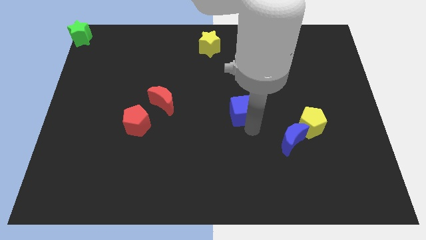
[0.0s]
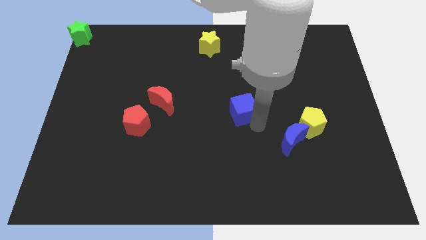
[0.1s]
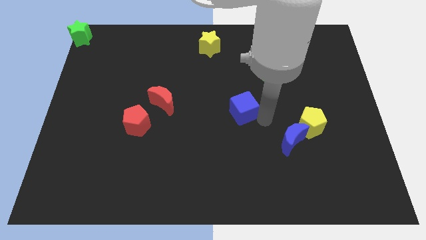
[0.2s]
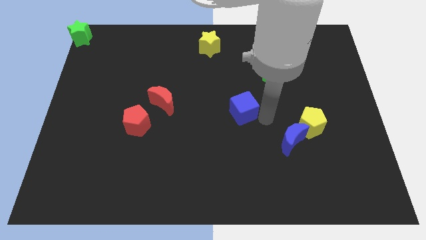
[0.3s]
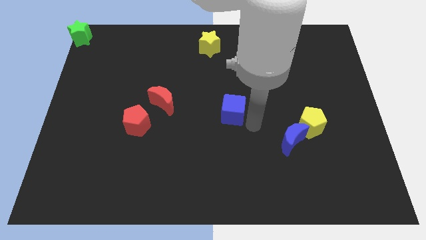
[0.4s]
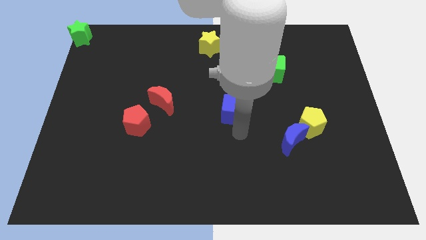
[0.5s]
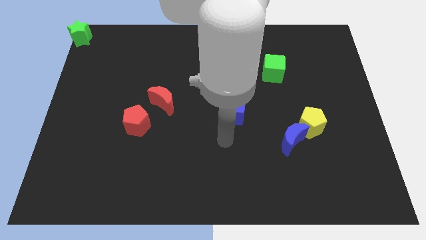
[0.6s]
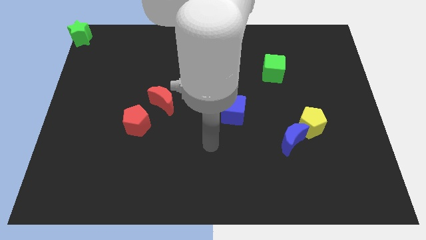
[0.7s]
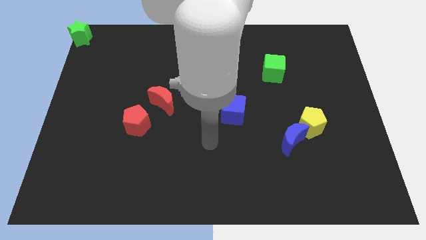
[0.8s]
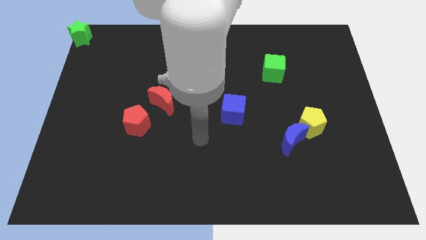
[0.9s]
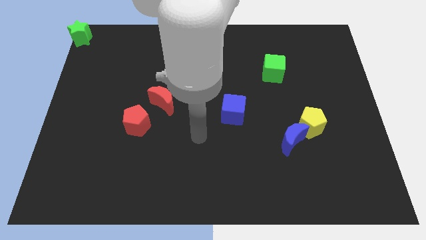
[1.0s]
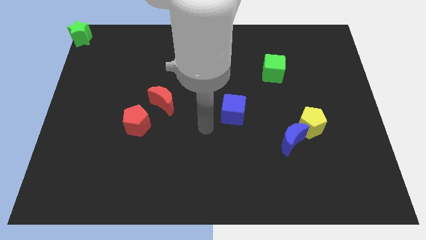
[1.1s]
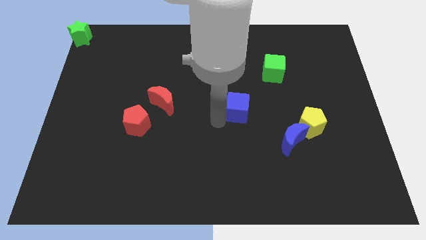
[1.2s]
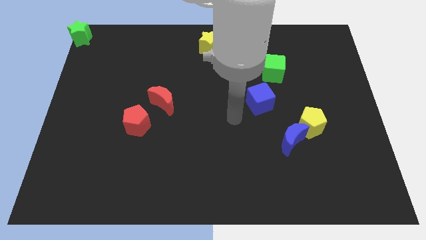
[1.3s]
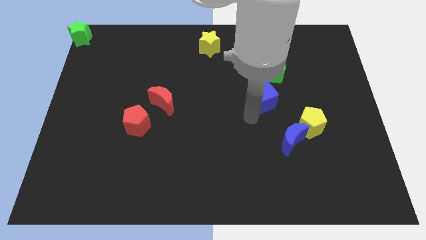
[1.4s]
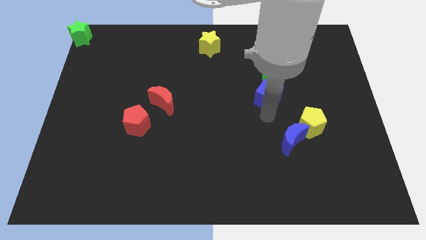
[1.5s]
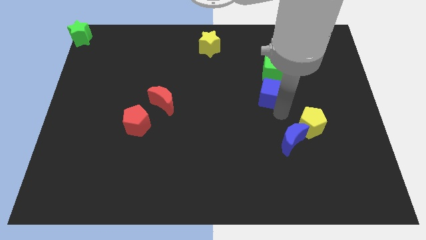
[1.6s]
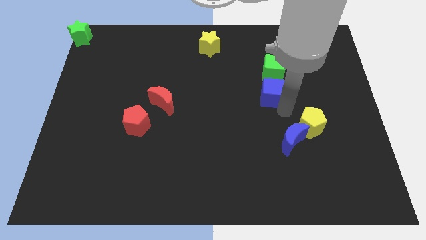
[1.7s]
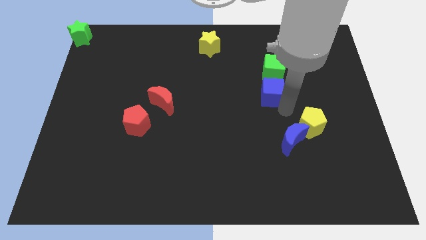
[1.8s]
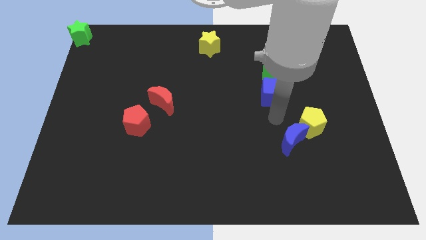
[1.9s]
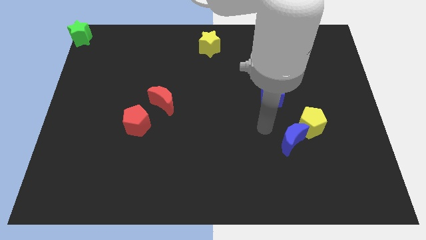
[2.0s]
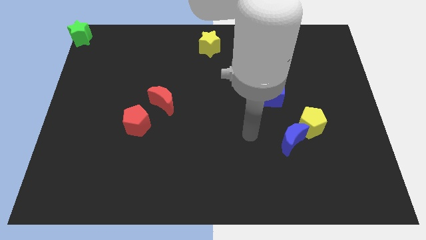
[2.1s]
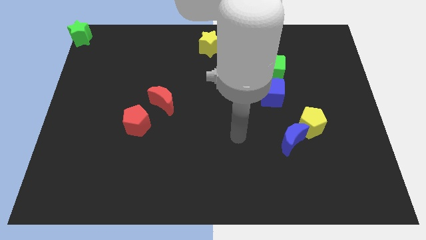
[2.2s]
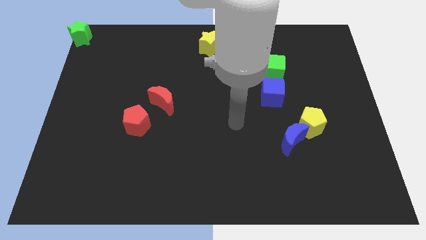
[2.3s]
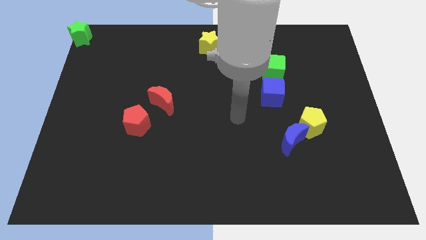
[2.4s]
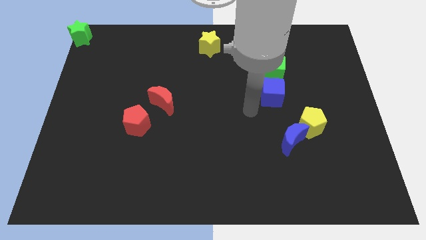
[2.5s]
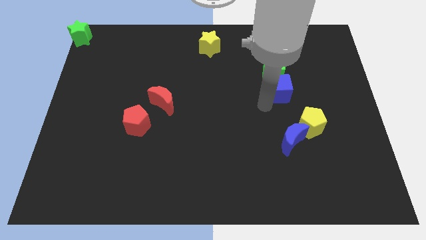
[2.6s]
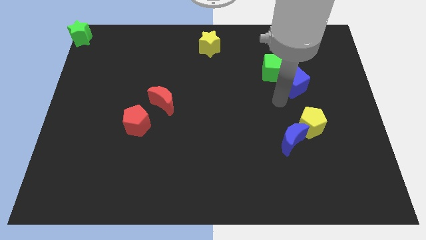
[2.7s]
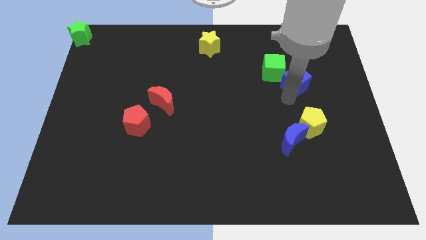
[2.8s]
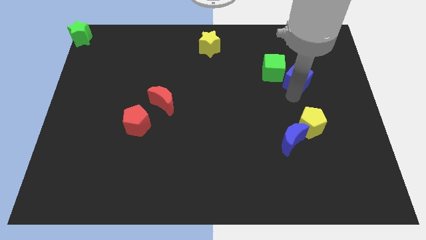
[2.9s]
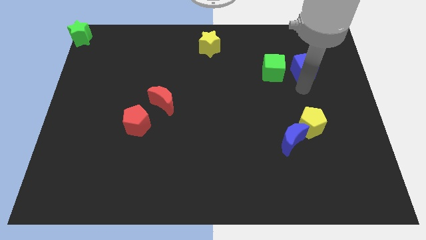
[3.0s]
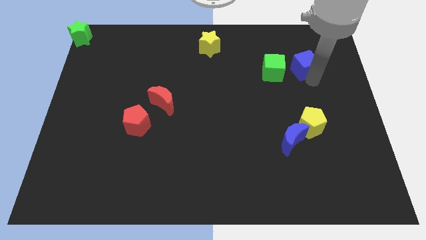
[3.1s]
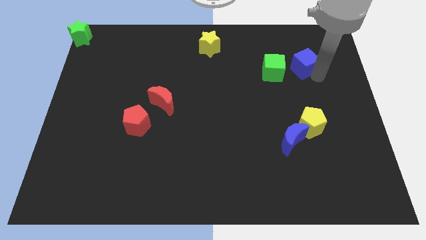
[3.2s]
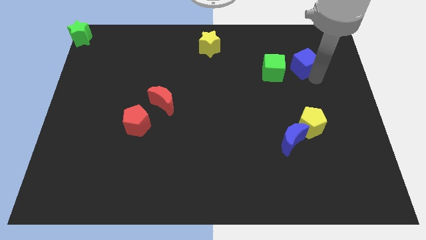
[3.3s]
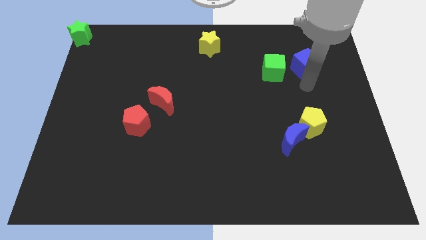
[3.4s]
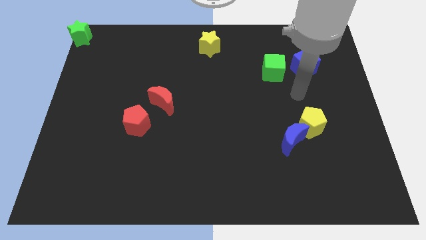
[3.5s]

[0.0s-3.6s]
move the blue cube to the right side of the green cube

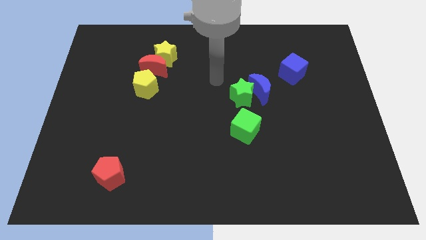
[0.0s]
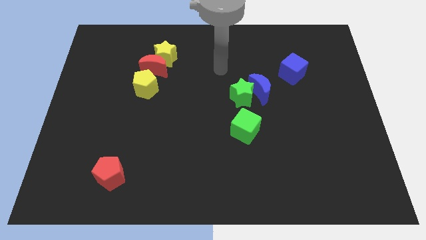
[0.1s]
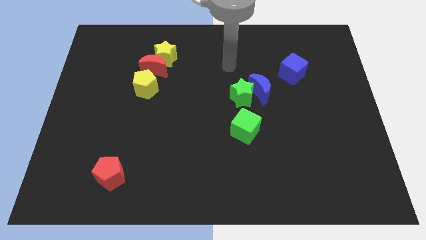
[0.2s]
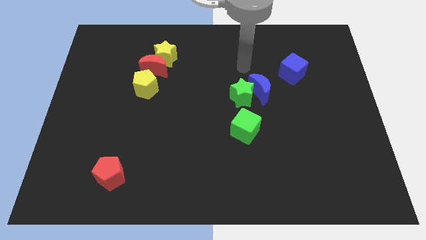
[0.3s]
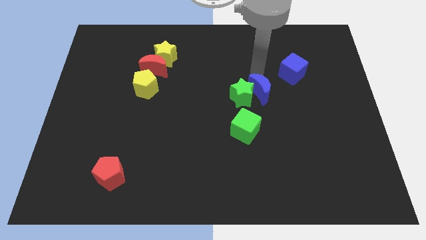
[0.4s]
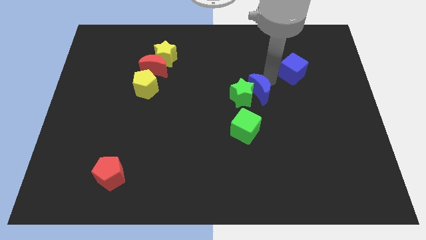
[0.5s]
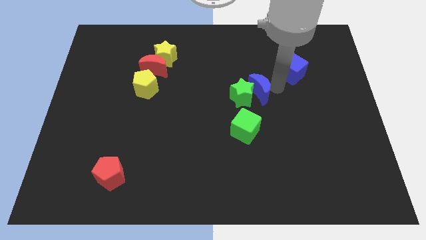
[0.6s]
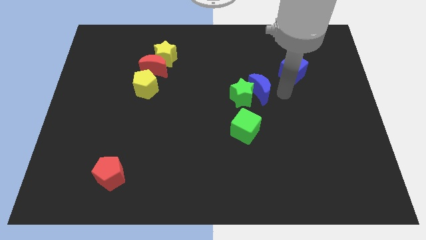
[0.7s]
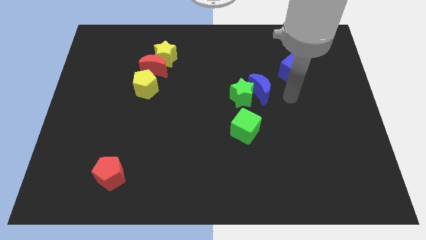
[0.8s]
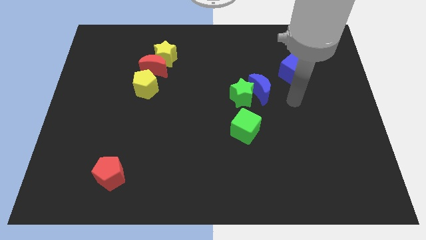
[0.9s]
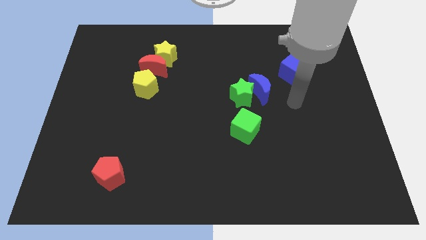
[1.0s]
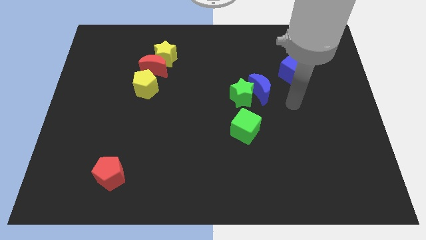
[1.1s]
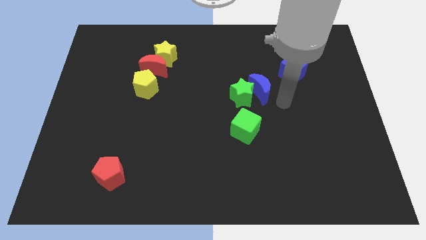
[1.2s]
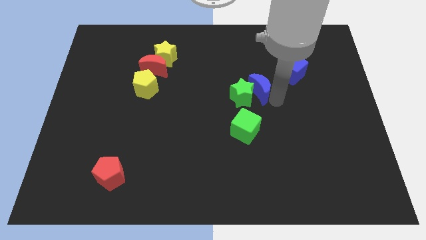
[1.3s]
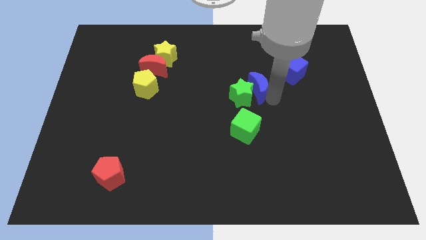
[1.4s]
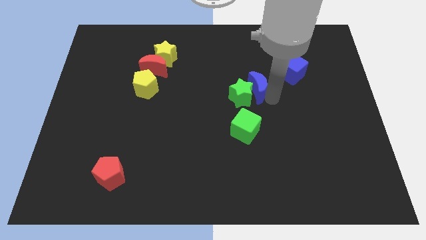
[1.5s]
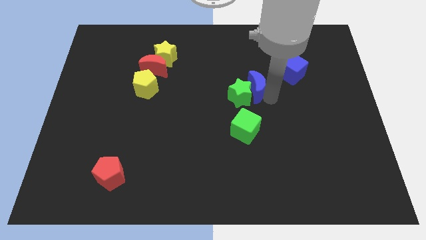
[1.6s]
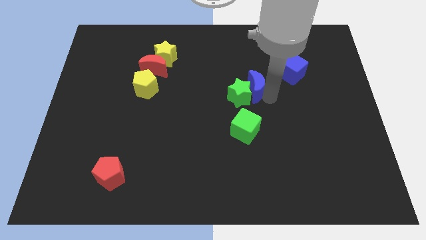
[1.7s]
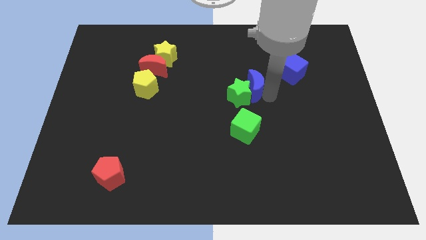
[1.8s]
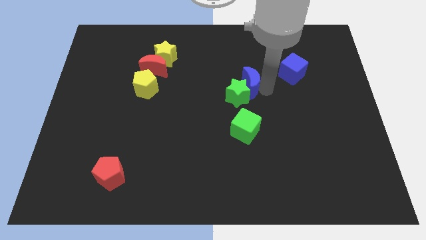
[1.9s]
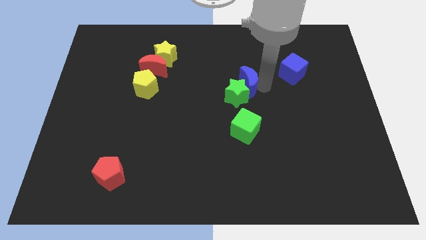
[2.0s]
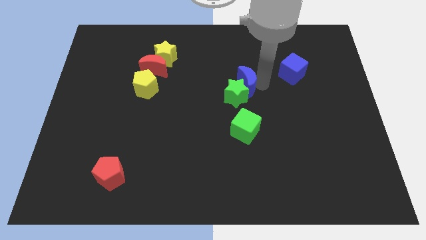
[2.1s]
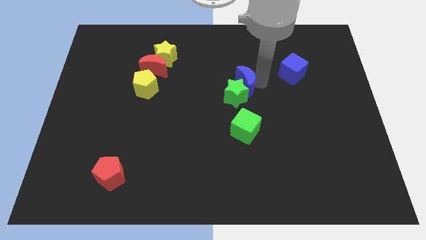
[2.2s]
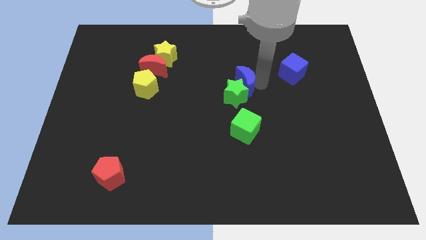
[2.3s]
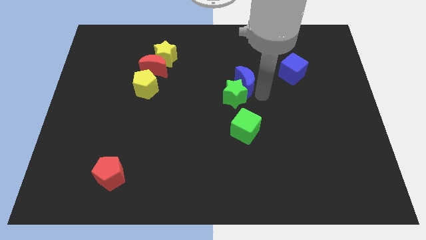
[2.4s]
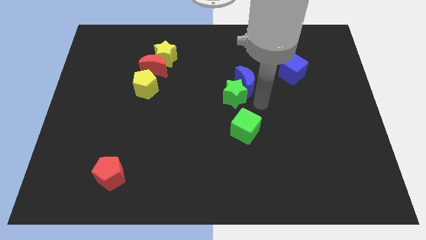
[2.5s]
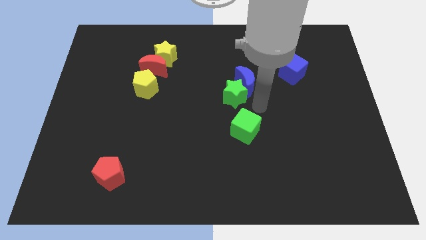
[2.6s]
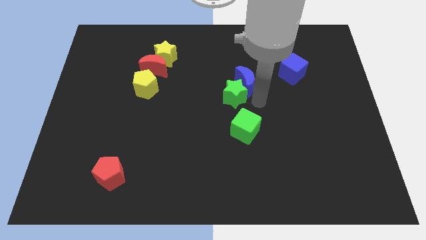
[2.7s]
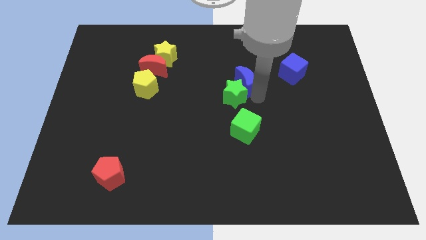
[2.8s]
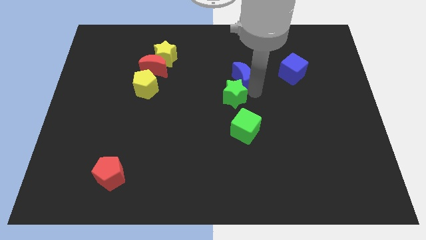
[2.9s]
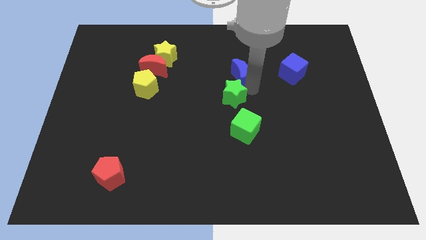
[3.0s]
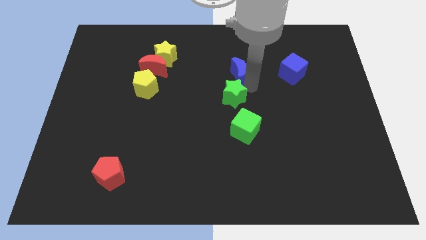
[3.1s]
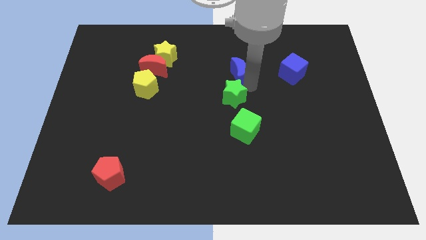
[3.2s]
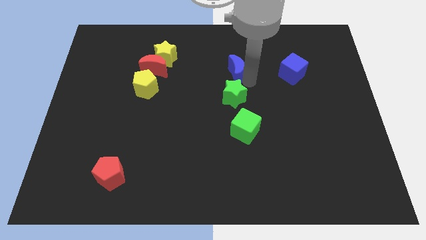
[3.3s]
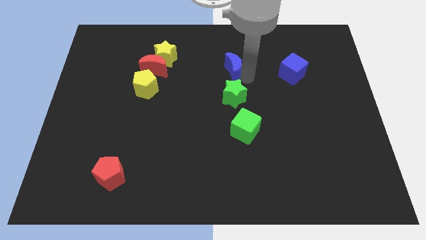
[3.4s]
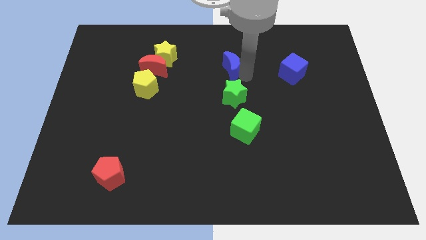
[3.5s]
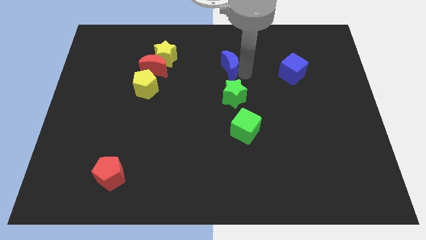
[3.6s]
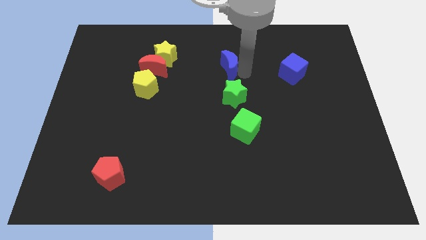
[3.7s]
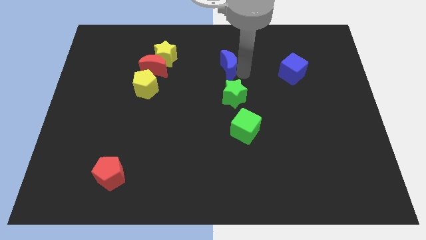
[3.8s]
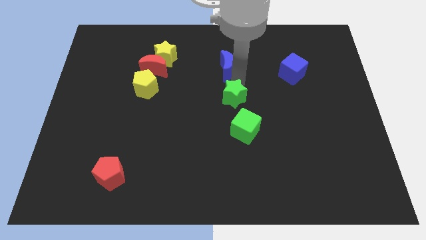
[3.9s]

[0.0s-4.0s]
place the blue crescent above the green star

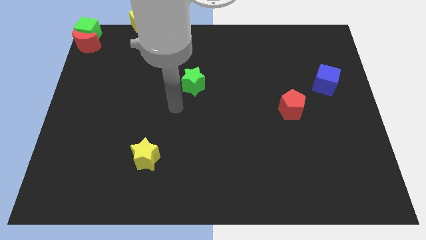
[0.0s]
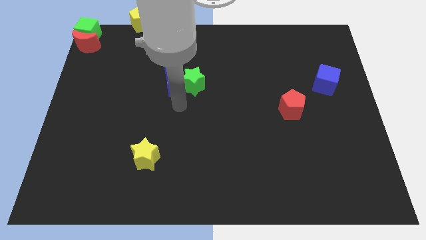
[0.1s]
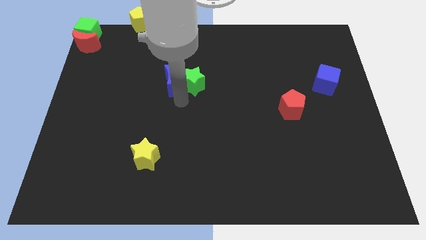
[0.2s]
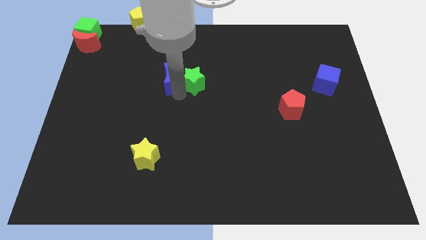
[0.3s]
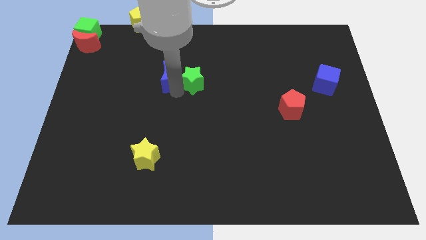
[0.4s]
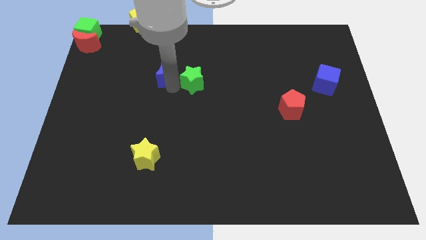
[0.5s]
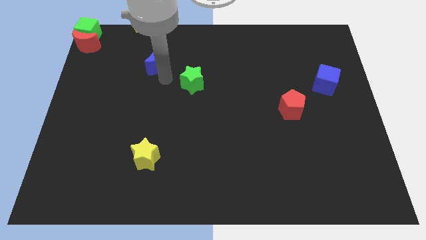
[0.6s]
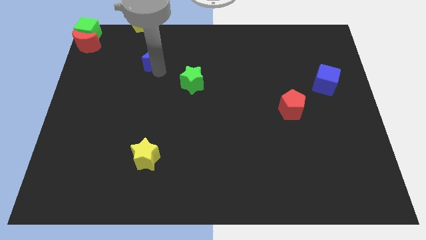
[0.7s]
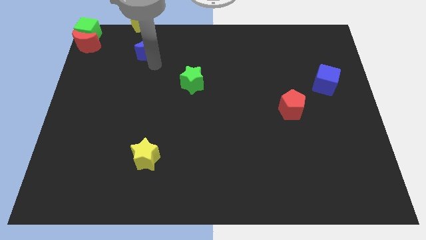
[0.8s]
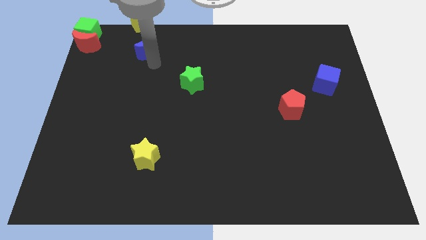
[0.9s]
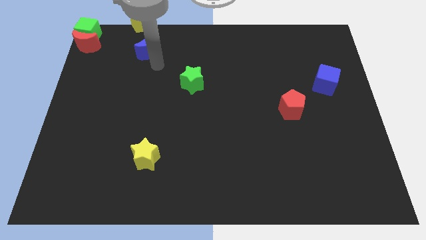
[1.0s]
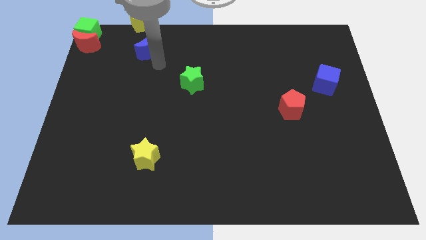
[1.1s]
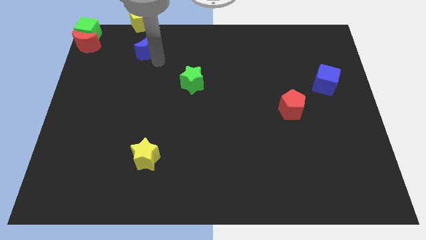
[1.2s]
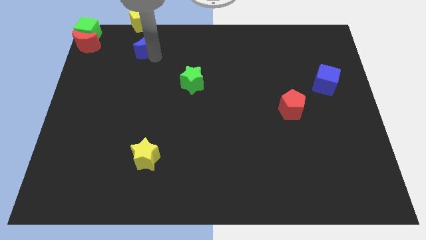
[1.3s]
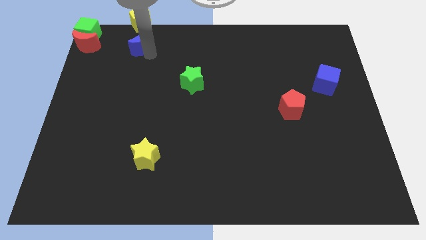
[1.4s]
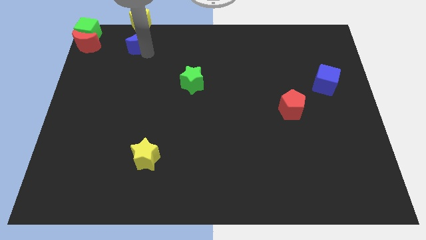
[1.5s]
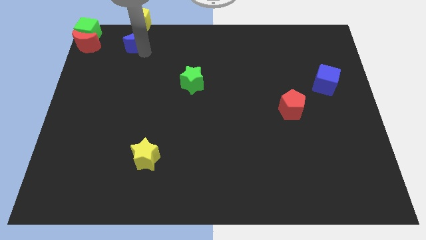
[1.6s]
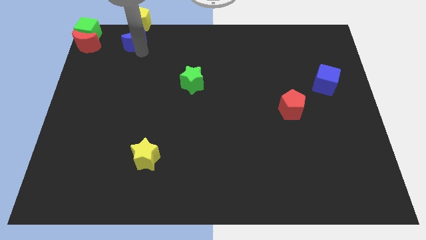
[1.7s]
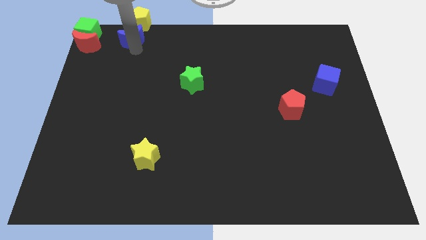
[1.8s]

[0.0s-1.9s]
place the blue moon below the yellow pentagon
